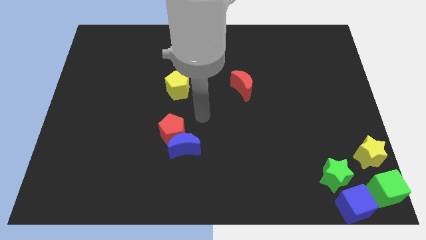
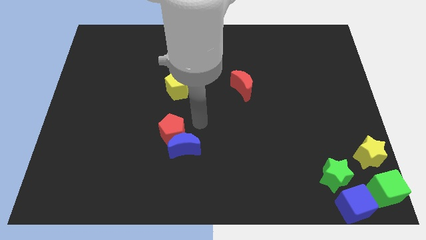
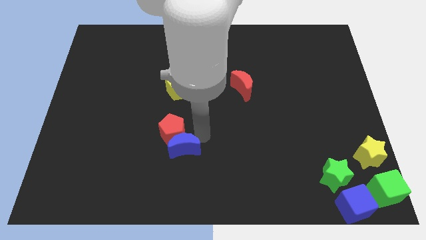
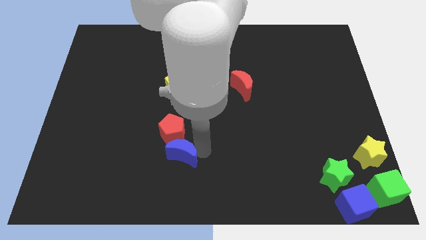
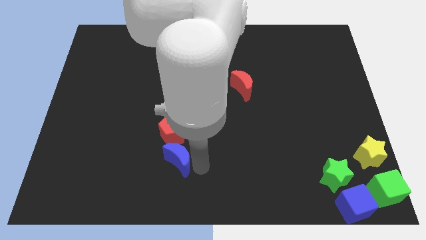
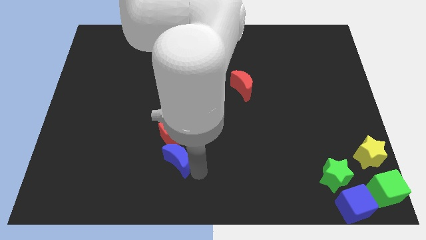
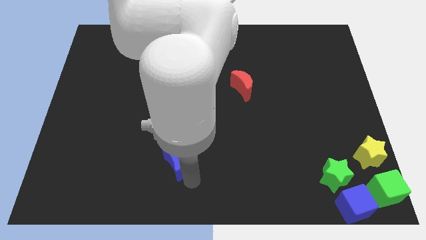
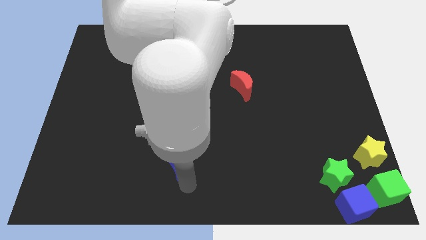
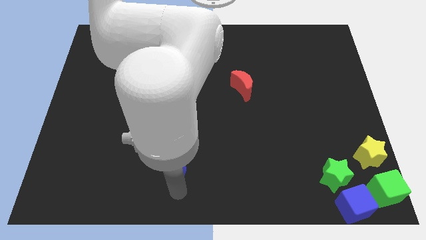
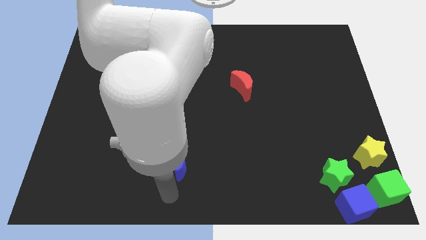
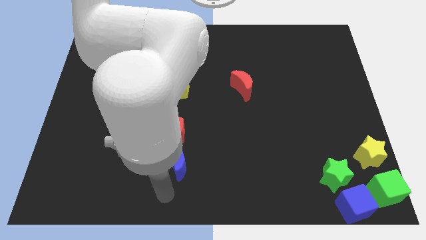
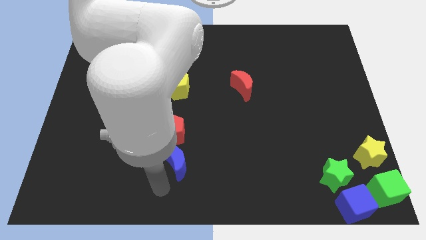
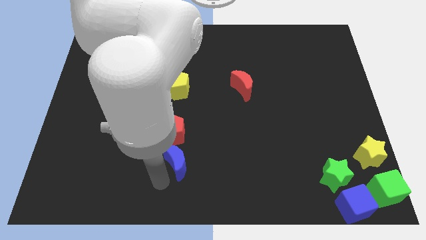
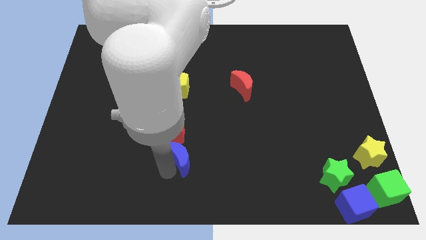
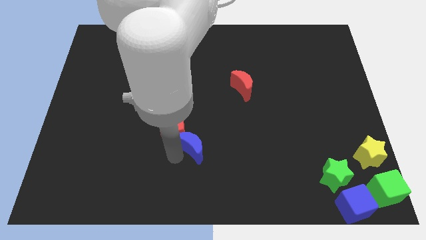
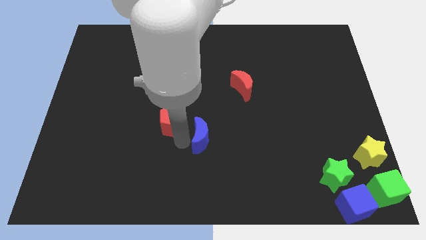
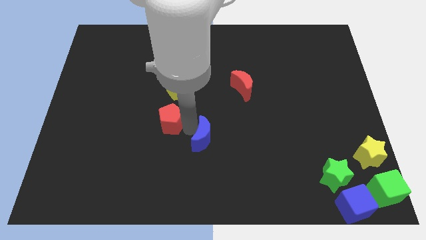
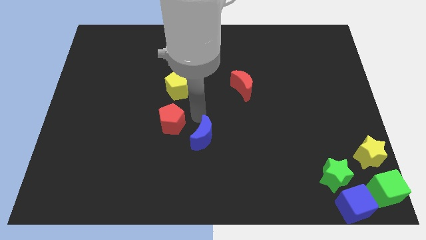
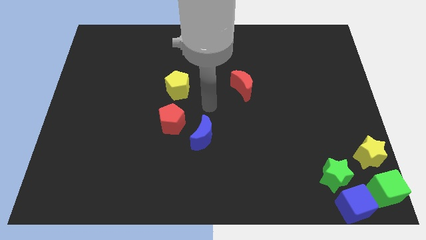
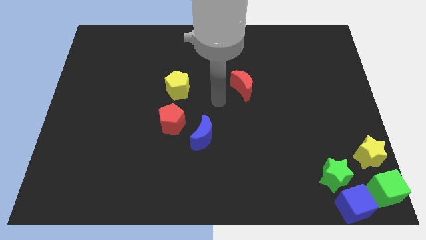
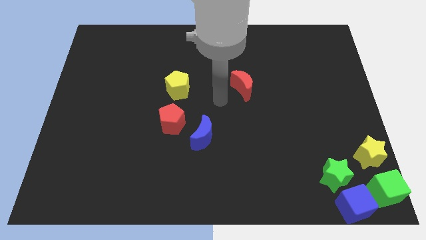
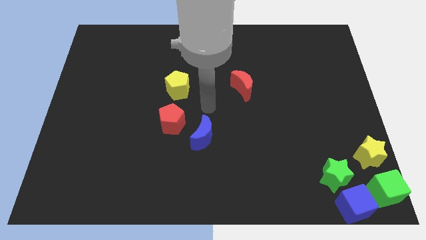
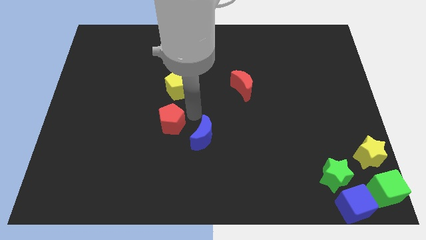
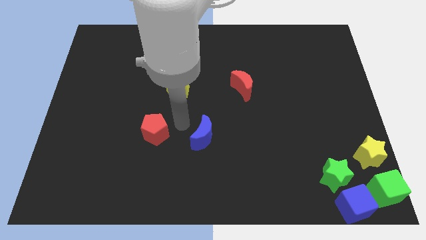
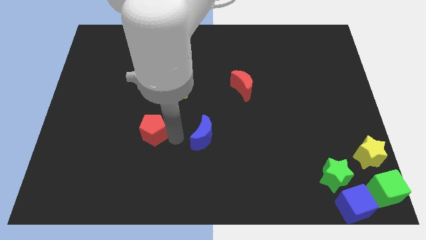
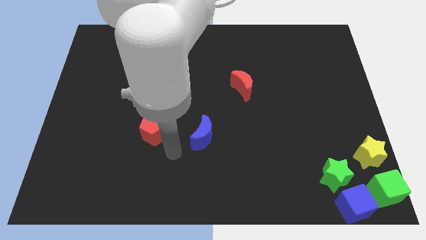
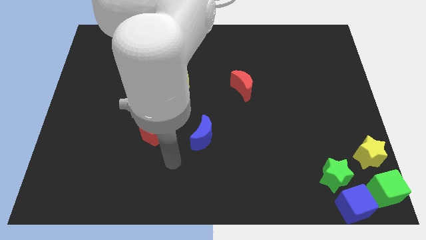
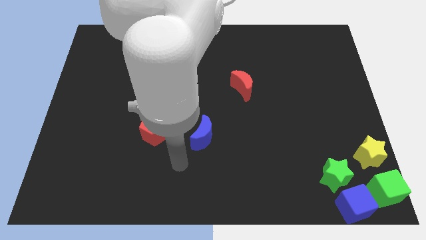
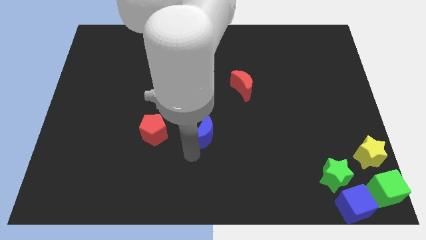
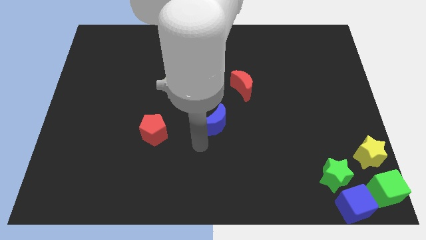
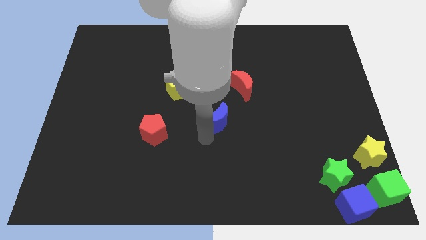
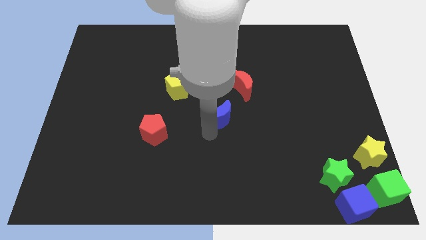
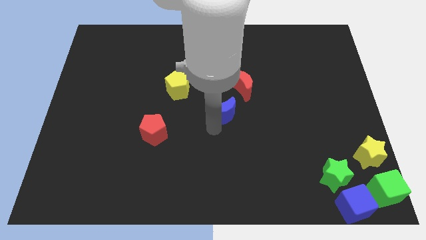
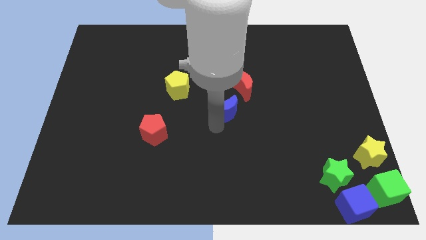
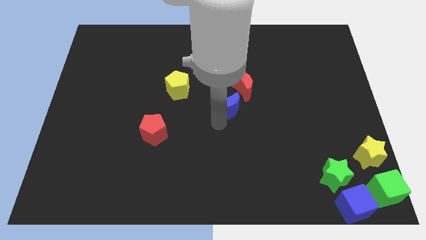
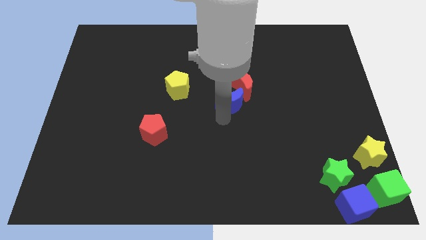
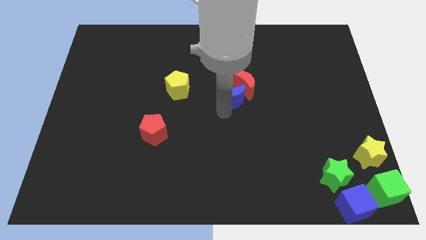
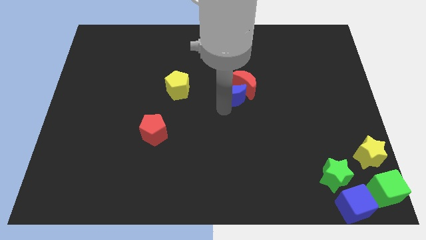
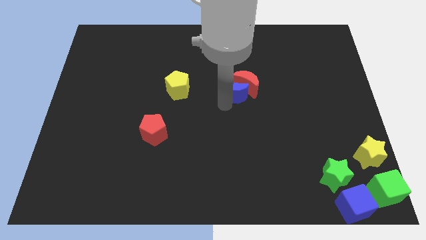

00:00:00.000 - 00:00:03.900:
push the blue moon into the red moon

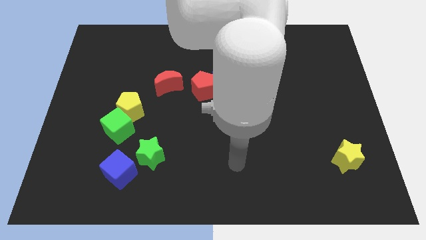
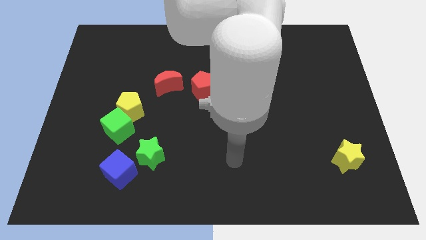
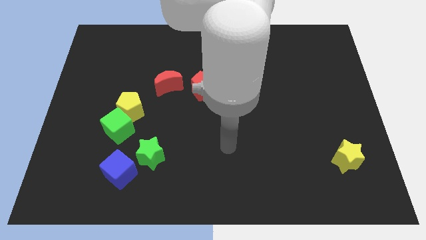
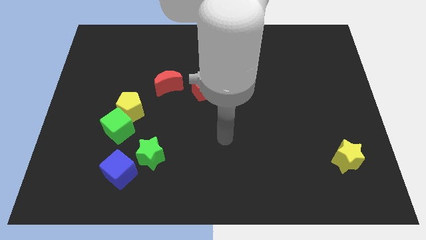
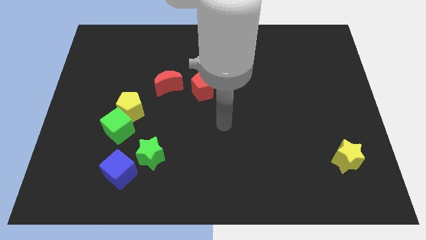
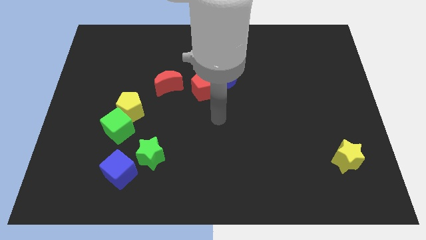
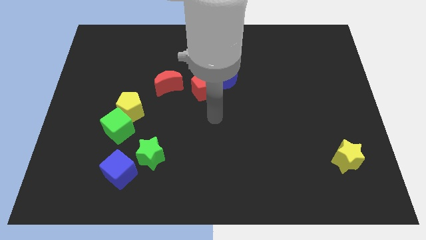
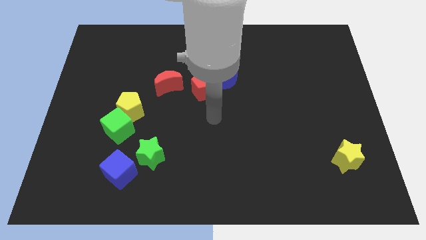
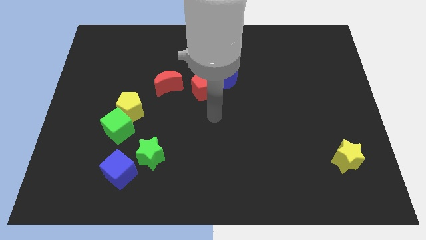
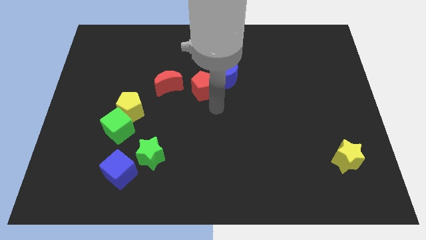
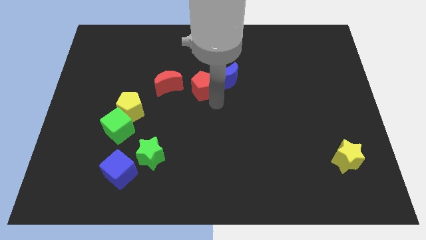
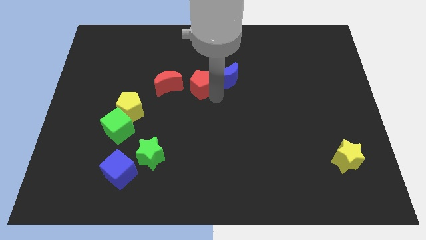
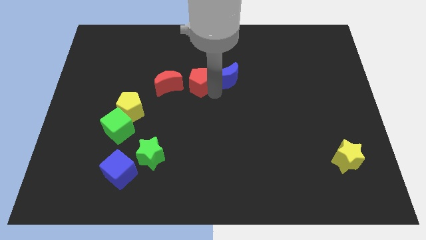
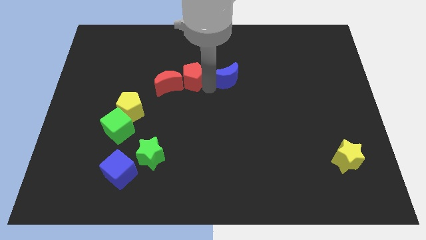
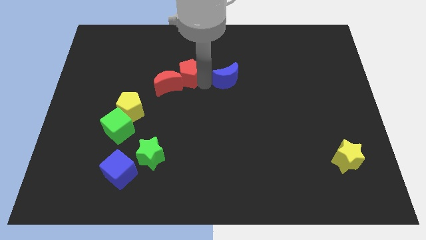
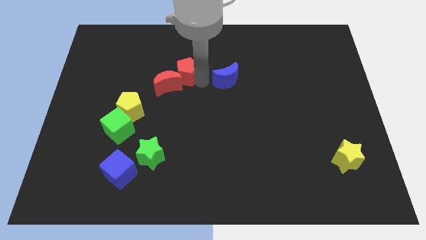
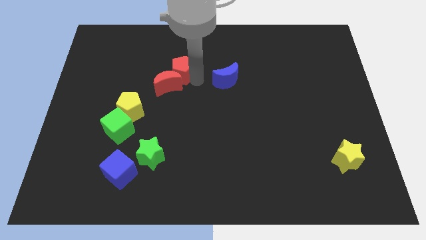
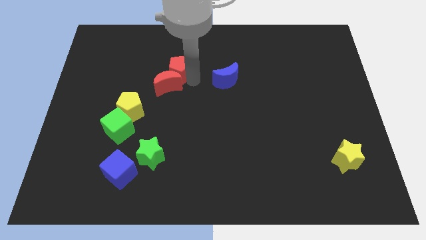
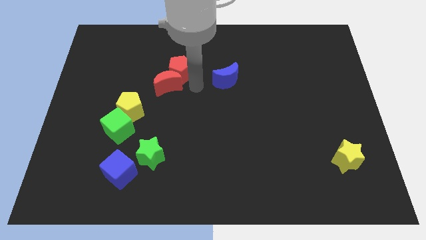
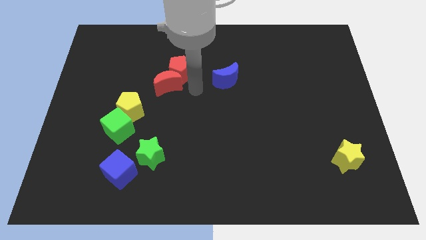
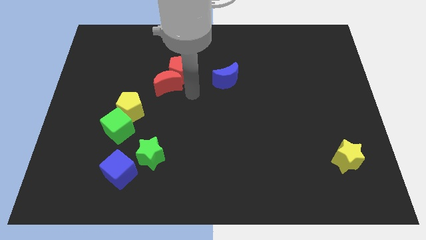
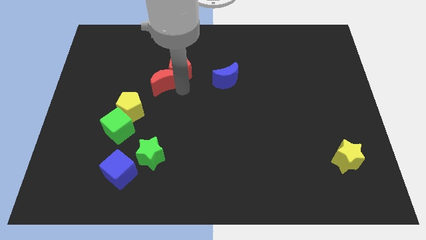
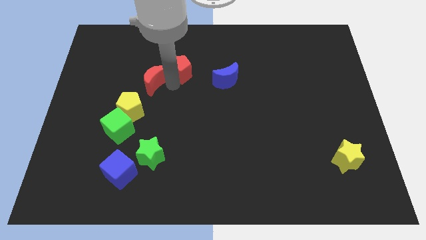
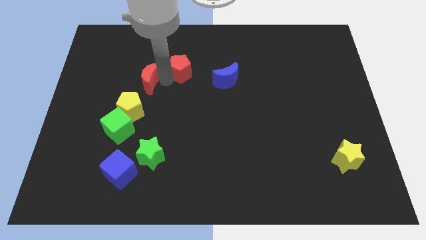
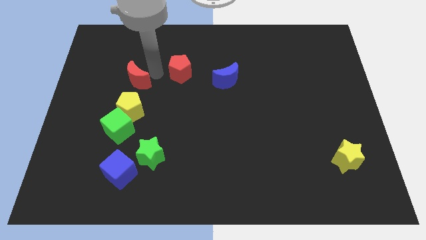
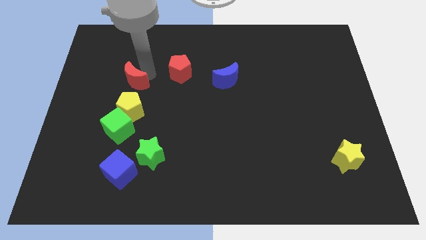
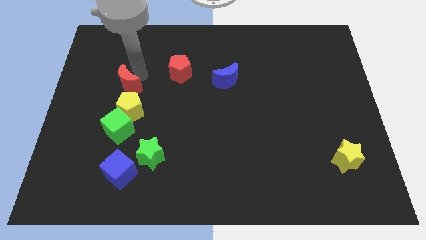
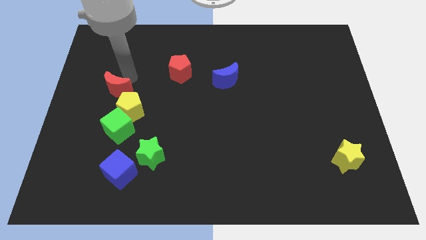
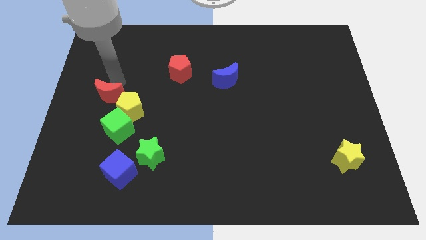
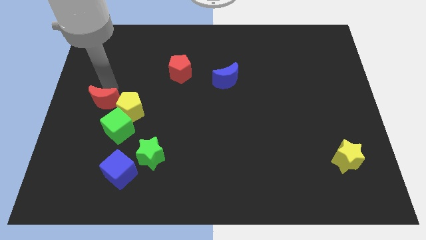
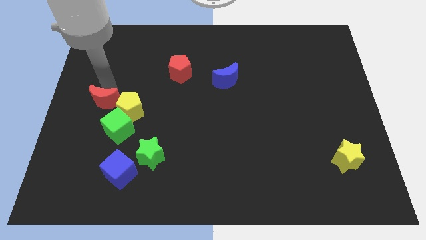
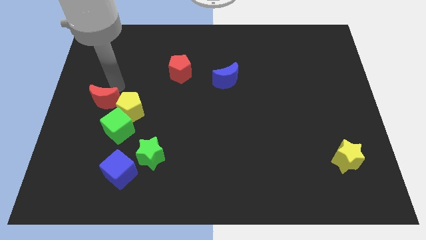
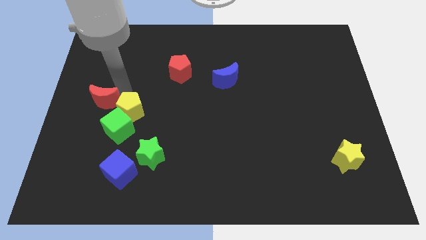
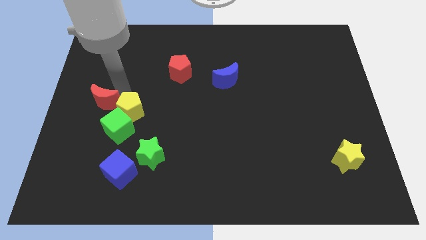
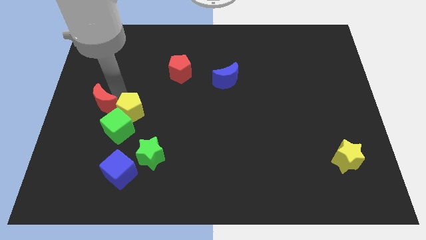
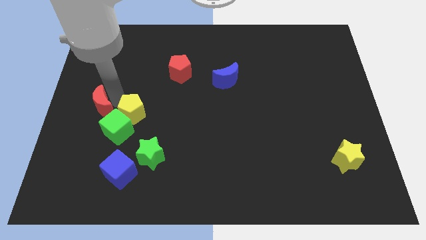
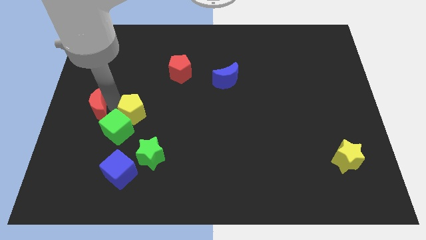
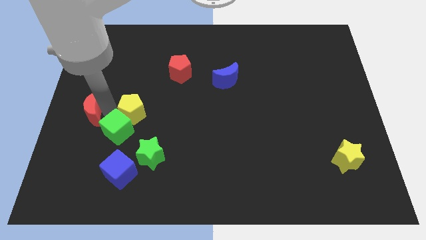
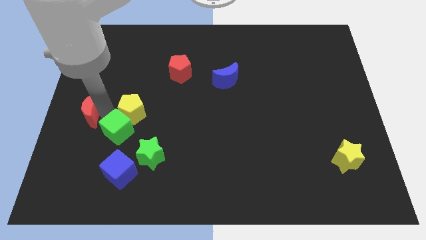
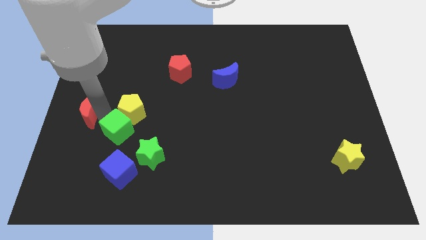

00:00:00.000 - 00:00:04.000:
go and place the red crescent to the left of the green cube

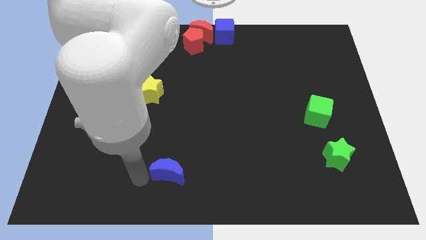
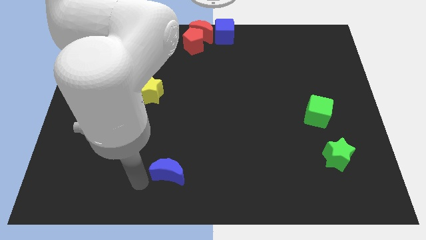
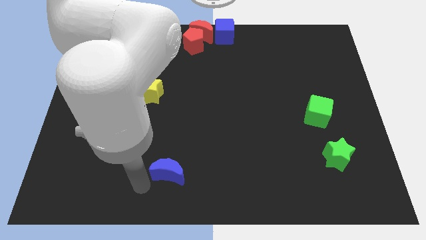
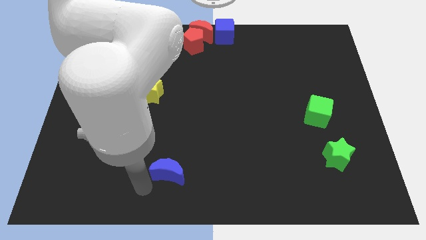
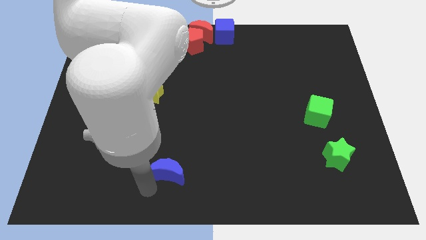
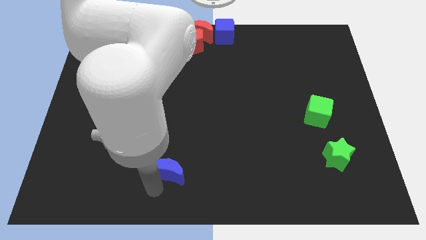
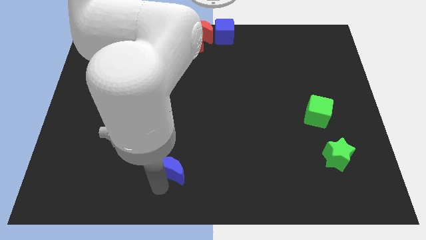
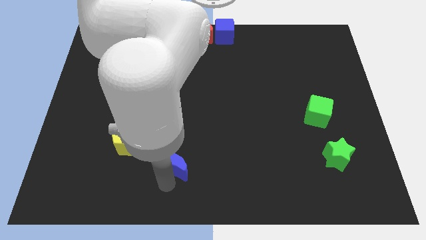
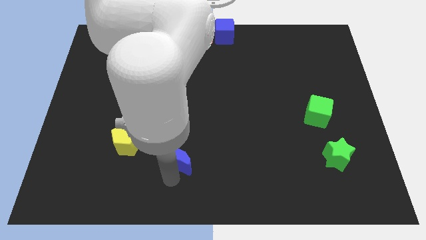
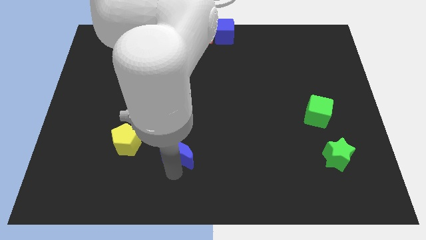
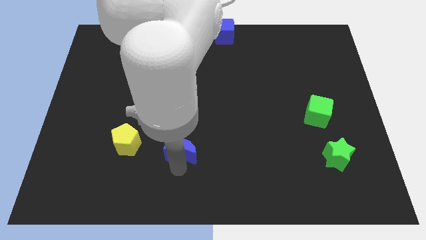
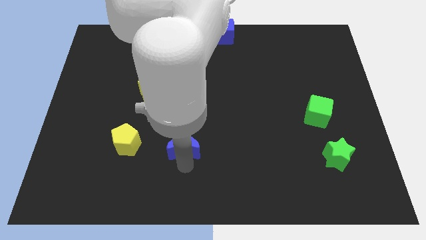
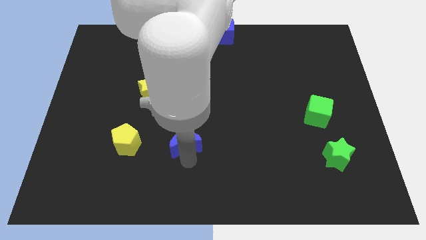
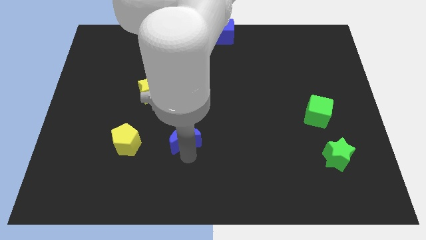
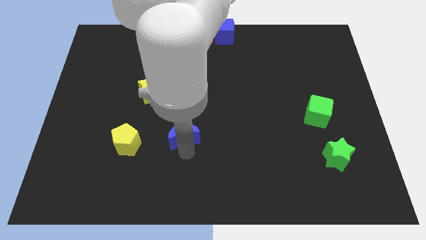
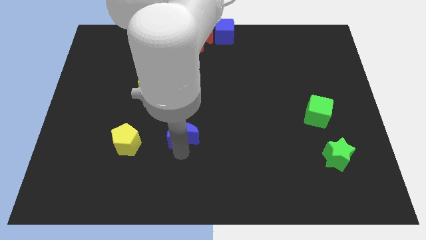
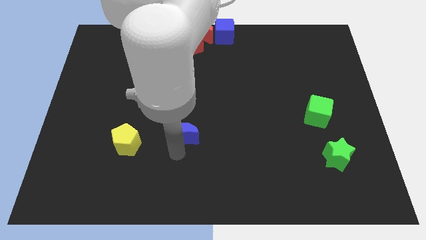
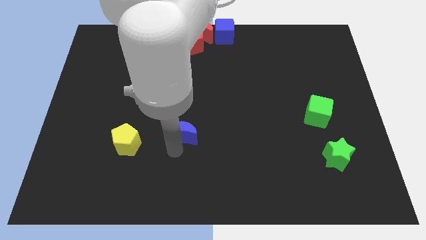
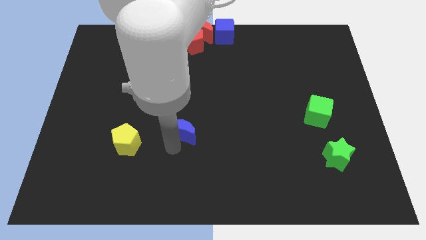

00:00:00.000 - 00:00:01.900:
push blue crescent parallel right to the yellow pentagon
